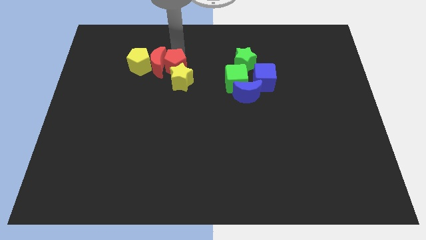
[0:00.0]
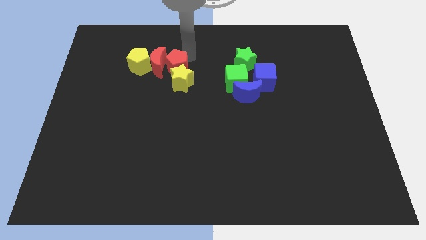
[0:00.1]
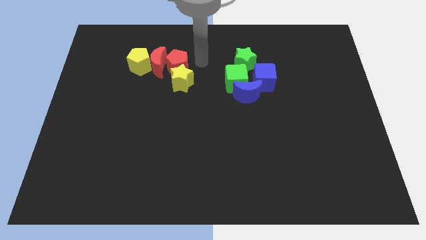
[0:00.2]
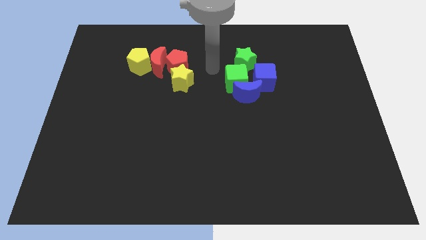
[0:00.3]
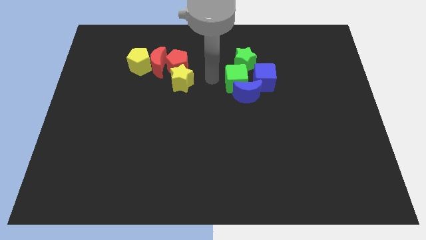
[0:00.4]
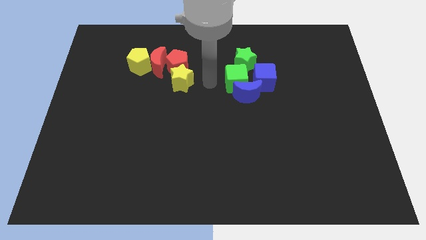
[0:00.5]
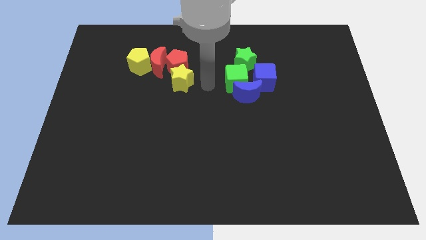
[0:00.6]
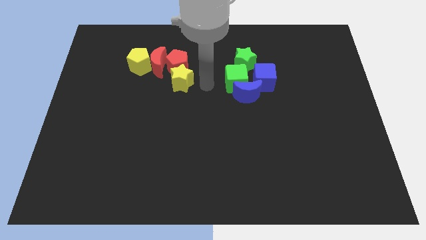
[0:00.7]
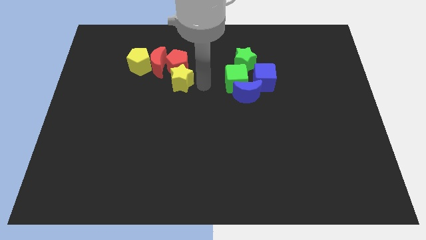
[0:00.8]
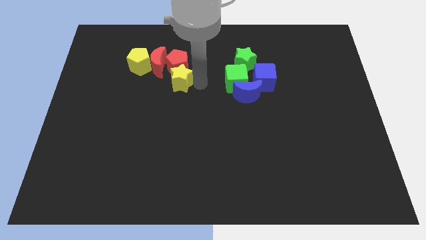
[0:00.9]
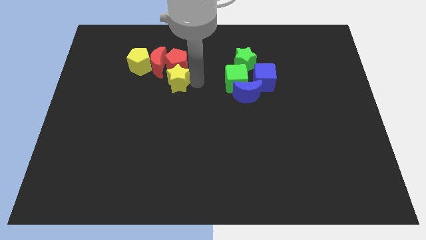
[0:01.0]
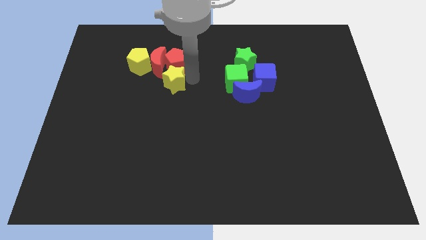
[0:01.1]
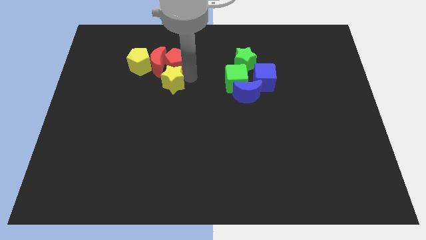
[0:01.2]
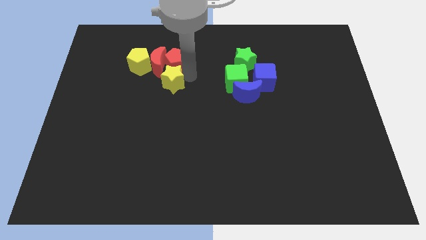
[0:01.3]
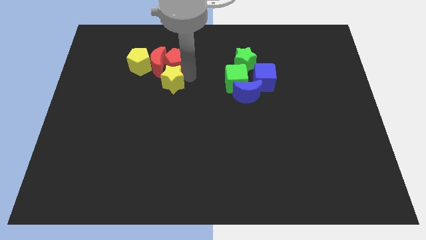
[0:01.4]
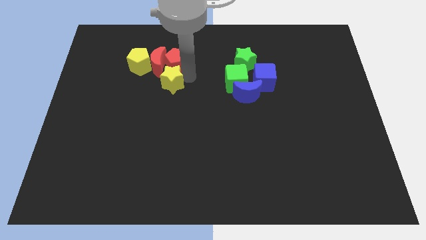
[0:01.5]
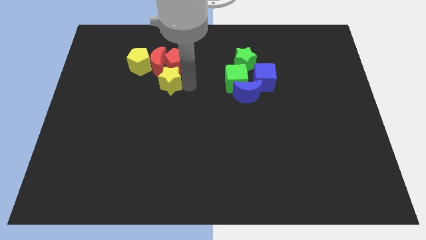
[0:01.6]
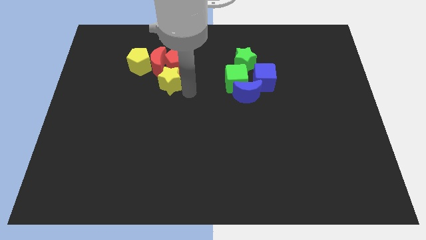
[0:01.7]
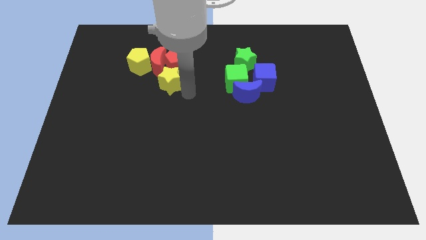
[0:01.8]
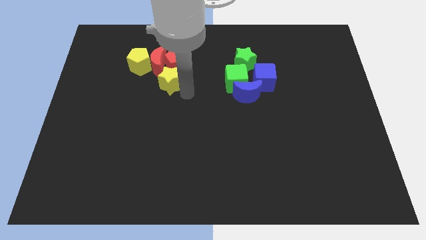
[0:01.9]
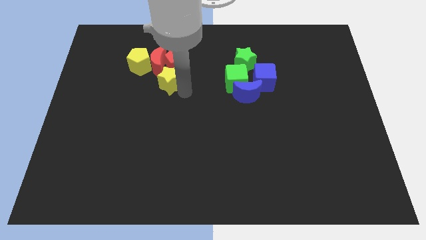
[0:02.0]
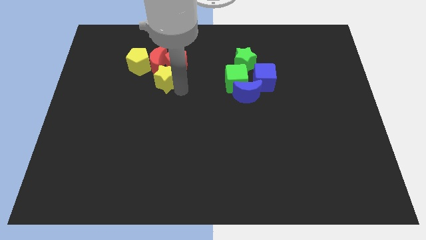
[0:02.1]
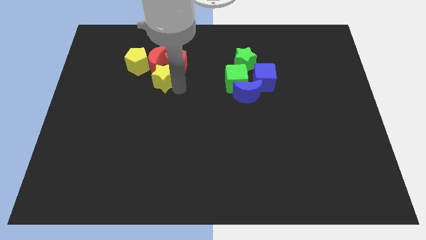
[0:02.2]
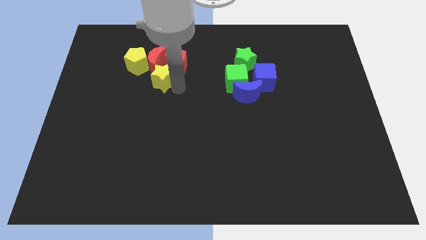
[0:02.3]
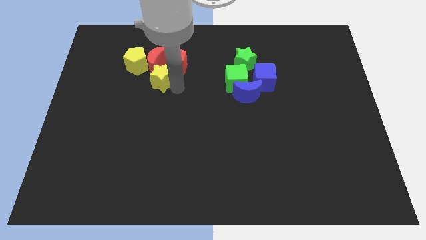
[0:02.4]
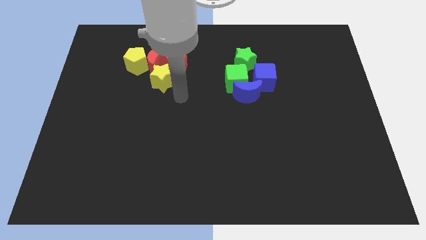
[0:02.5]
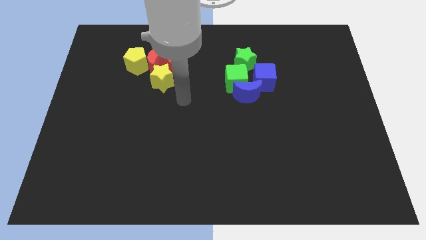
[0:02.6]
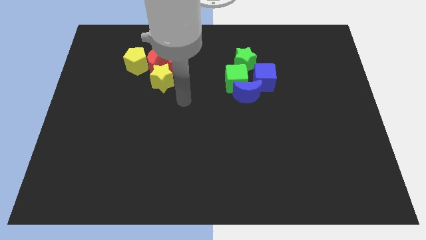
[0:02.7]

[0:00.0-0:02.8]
push the yellow star into the red moon

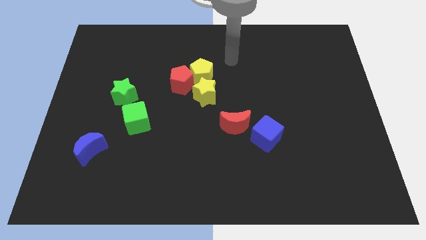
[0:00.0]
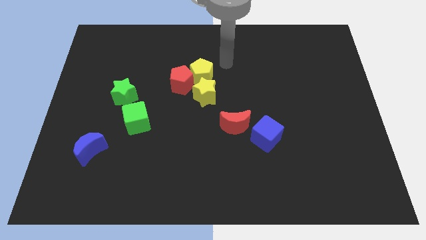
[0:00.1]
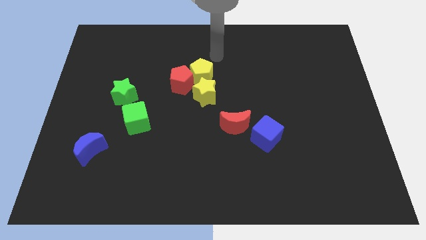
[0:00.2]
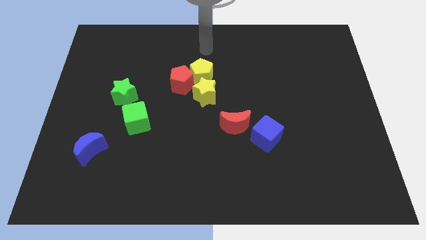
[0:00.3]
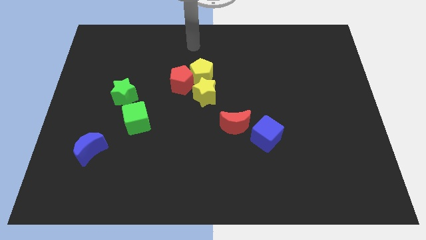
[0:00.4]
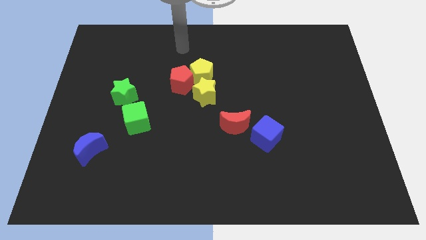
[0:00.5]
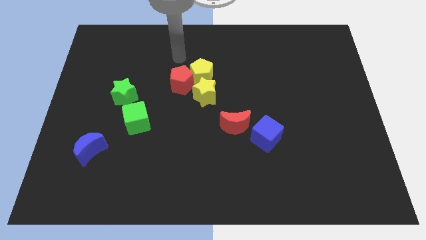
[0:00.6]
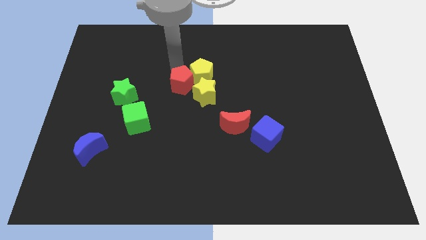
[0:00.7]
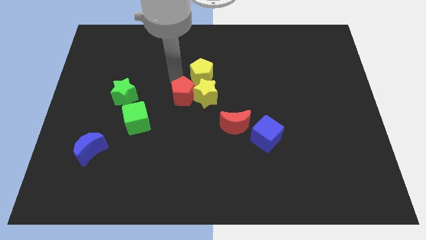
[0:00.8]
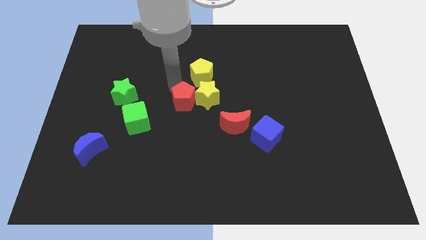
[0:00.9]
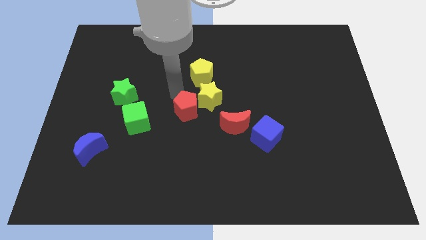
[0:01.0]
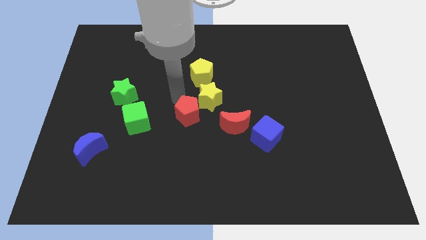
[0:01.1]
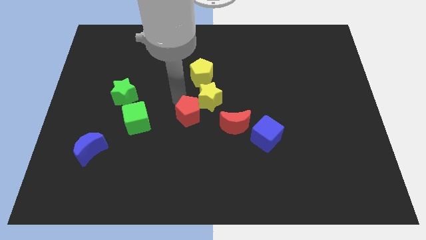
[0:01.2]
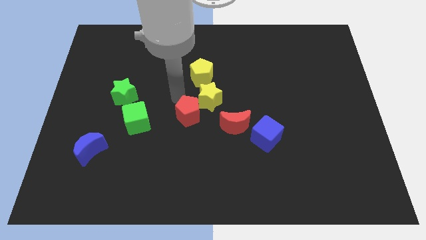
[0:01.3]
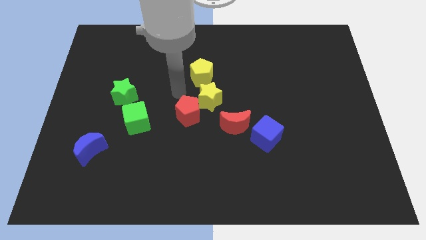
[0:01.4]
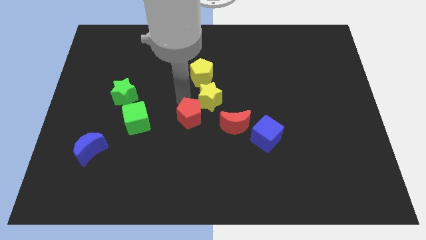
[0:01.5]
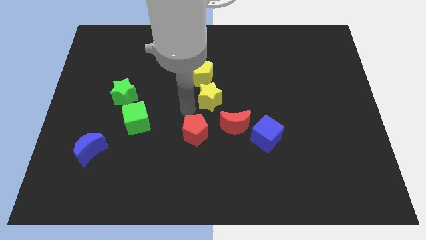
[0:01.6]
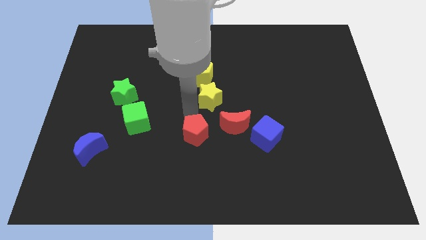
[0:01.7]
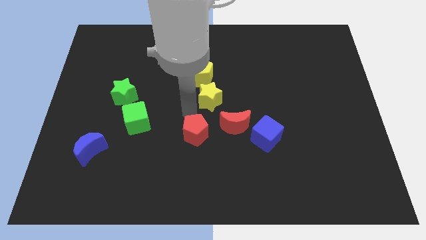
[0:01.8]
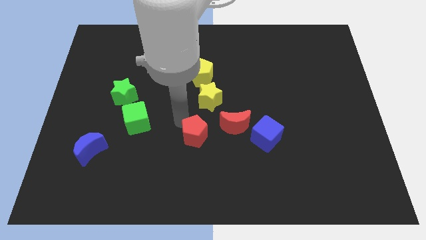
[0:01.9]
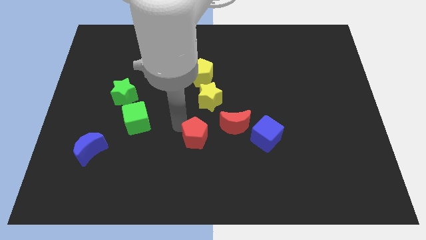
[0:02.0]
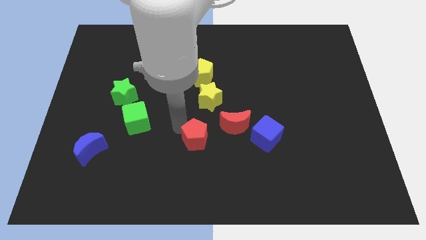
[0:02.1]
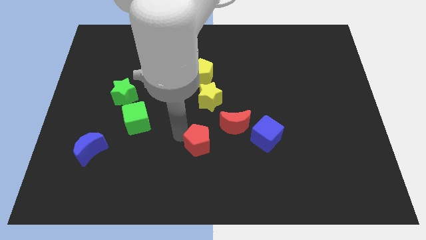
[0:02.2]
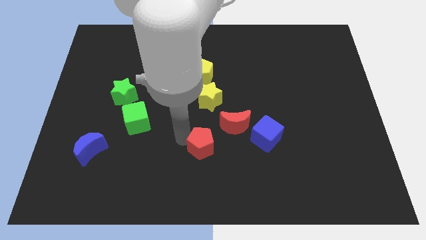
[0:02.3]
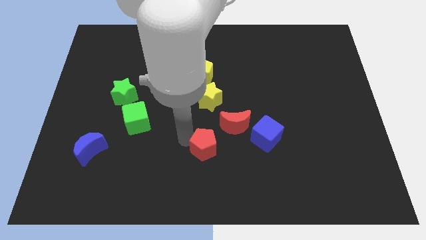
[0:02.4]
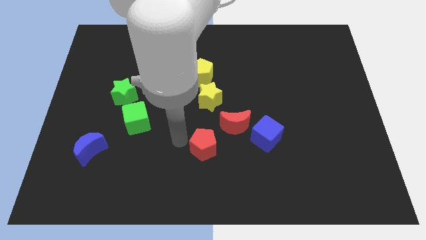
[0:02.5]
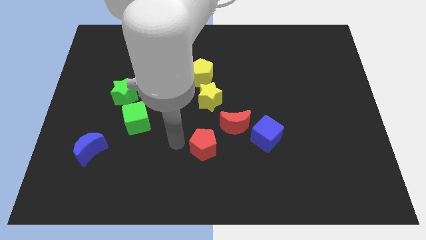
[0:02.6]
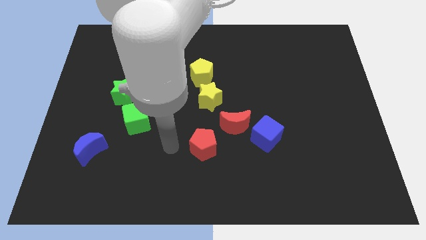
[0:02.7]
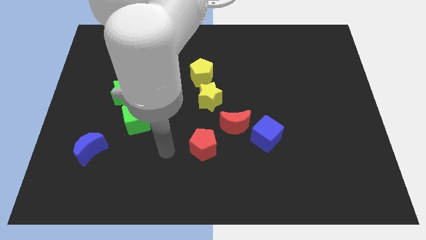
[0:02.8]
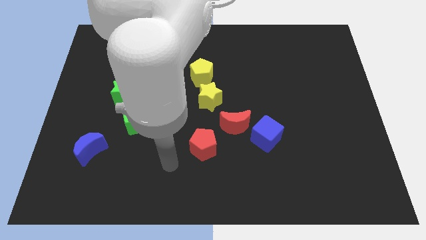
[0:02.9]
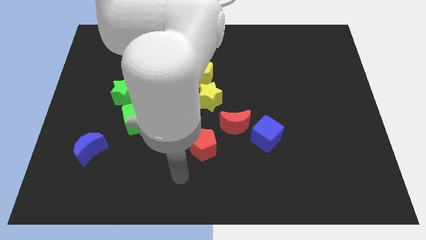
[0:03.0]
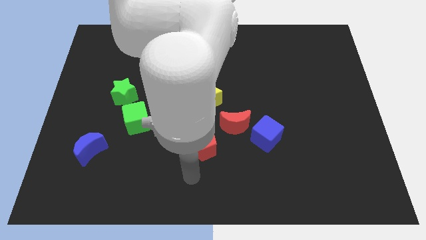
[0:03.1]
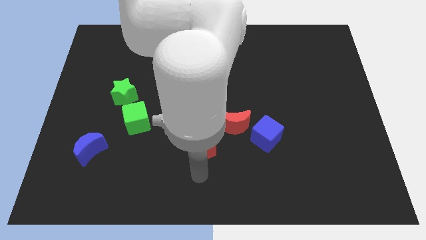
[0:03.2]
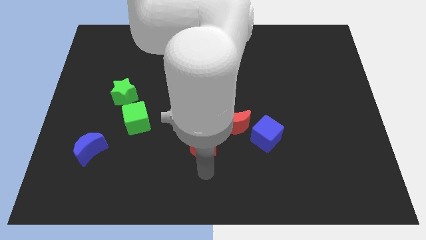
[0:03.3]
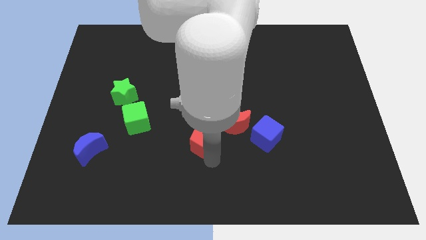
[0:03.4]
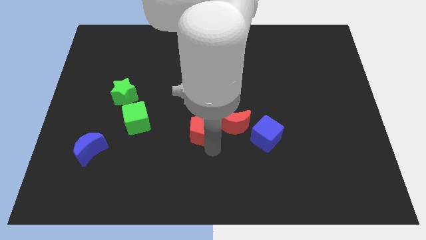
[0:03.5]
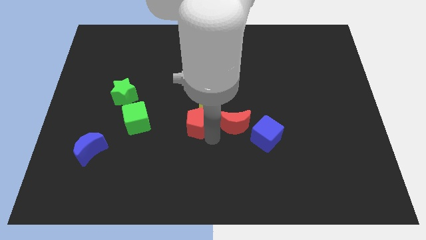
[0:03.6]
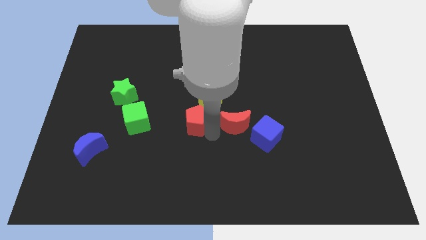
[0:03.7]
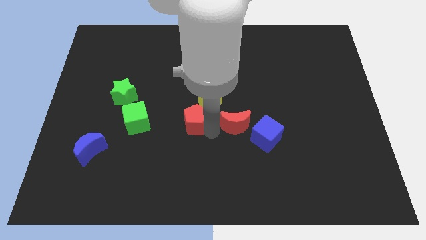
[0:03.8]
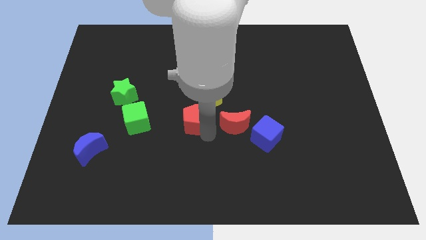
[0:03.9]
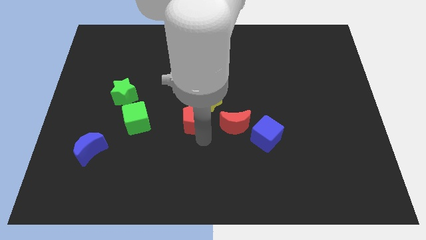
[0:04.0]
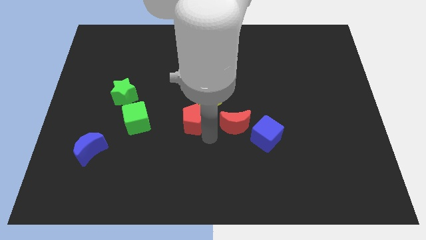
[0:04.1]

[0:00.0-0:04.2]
move the red pentagon to the bottom side of the yellow star

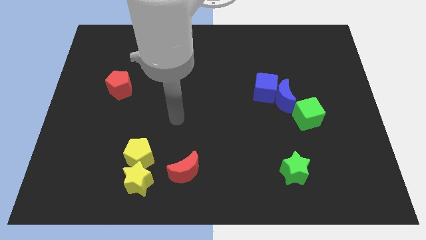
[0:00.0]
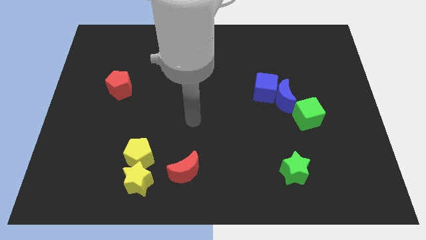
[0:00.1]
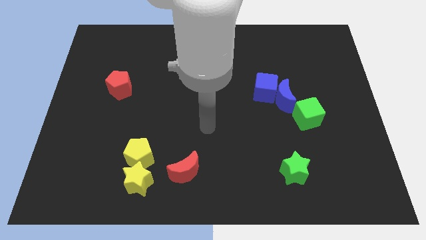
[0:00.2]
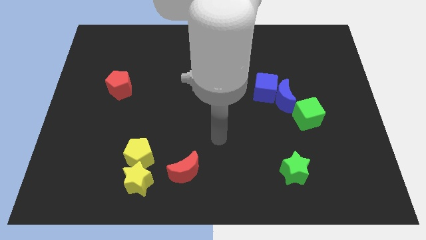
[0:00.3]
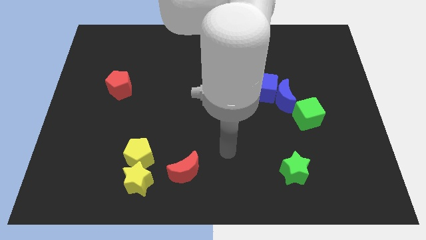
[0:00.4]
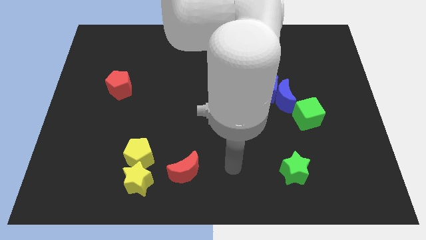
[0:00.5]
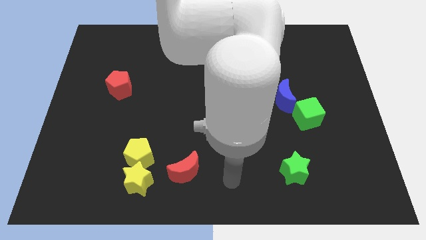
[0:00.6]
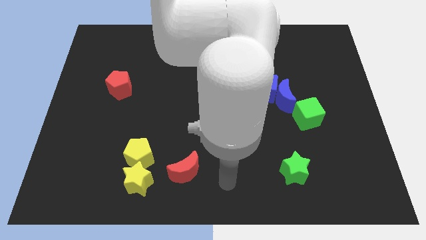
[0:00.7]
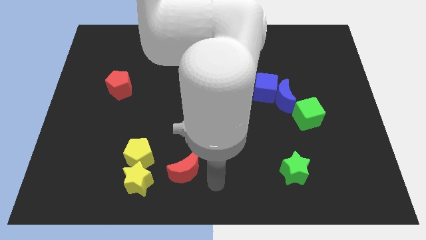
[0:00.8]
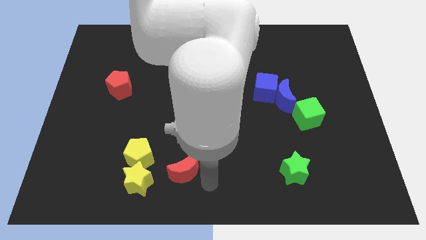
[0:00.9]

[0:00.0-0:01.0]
point your arm right to red crescent

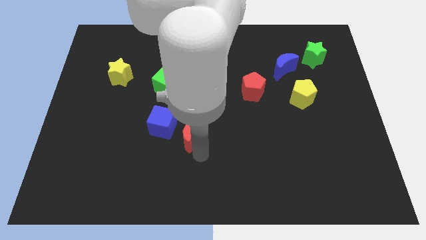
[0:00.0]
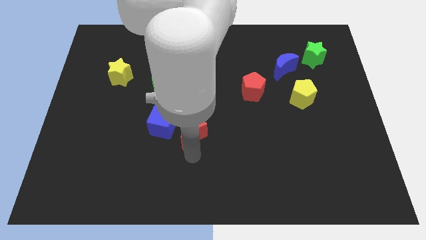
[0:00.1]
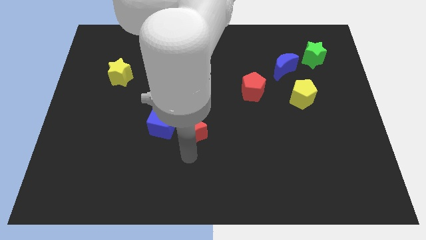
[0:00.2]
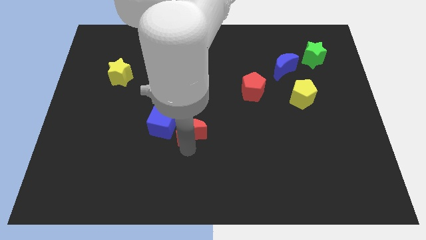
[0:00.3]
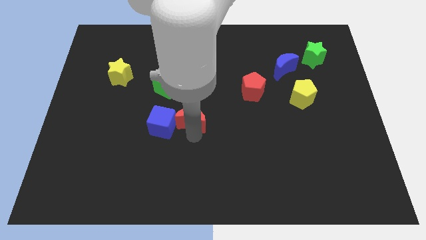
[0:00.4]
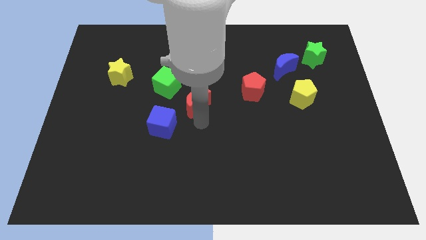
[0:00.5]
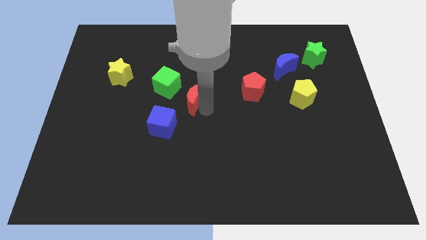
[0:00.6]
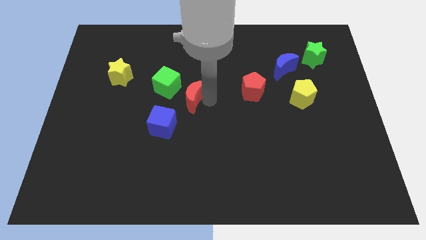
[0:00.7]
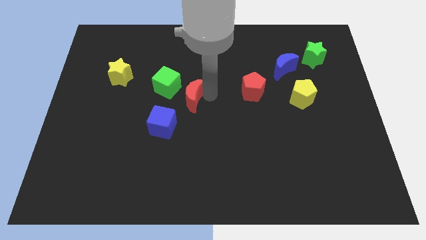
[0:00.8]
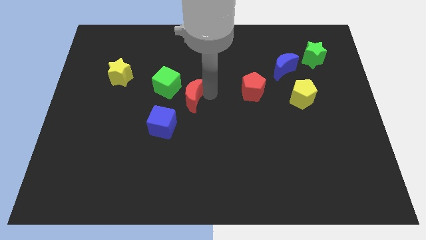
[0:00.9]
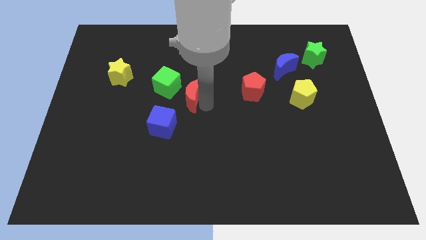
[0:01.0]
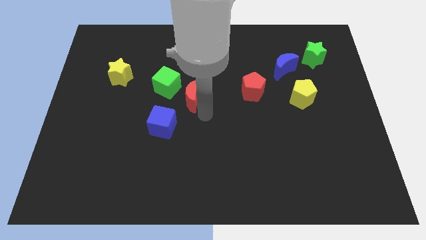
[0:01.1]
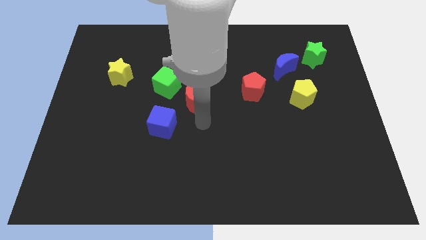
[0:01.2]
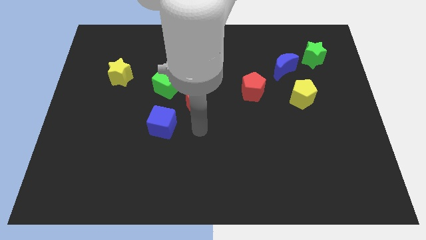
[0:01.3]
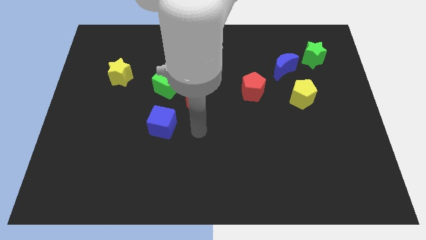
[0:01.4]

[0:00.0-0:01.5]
place red moon to the right side of the green cube
